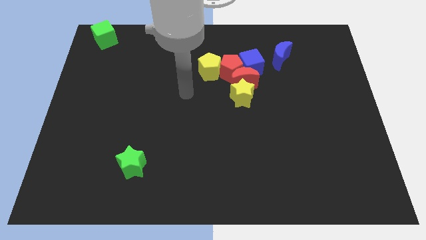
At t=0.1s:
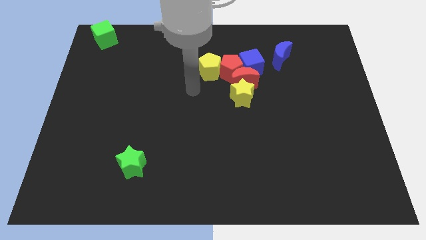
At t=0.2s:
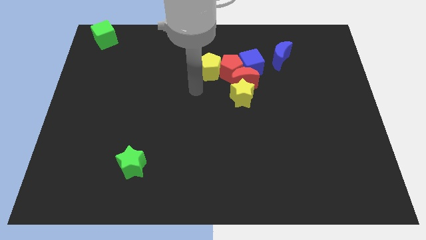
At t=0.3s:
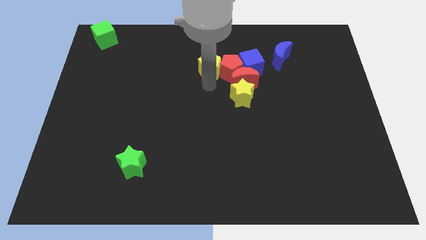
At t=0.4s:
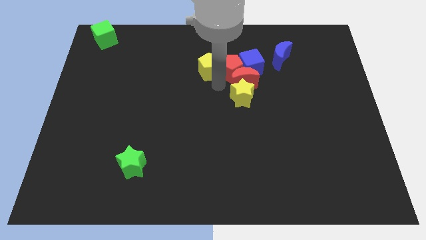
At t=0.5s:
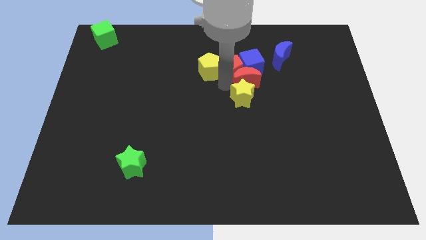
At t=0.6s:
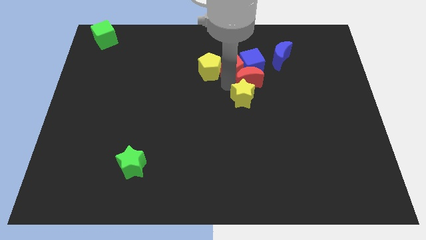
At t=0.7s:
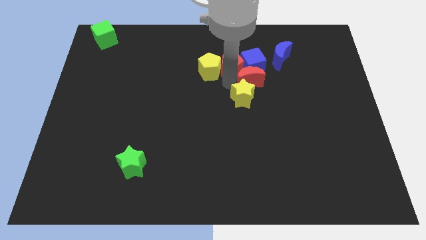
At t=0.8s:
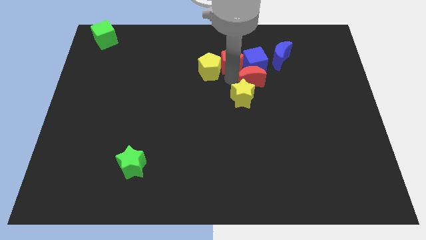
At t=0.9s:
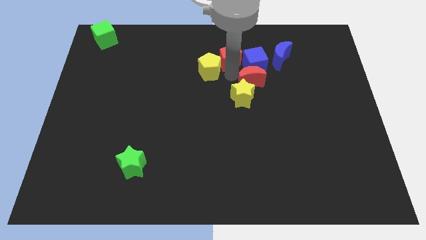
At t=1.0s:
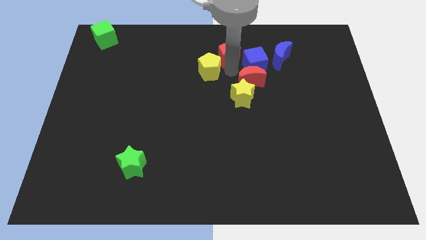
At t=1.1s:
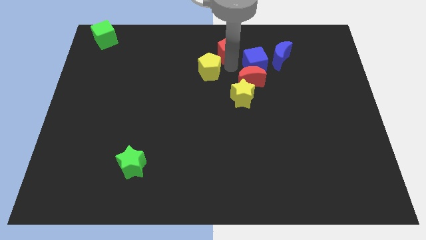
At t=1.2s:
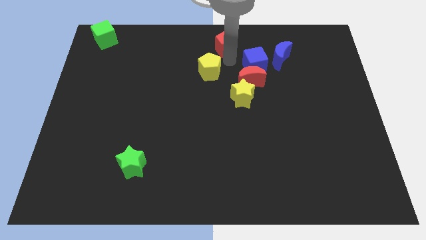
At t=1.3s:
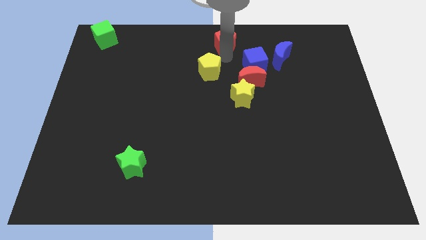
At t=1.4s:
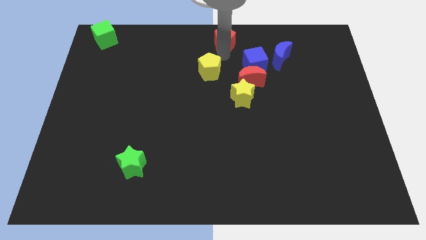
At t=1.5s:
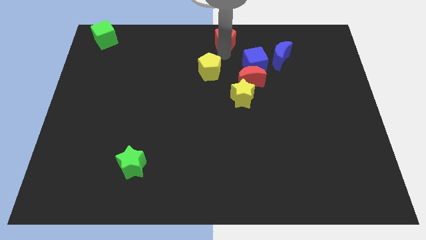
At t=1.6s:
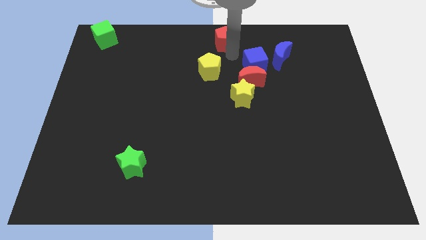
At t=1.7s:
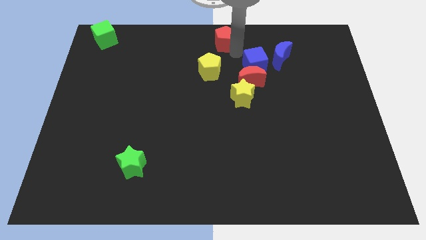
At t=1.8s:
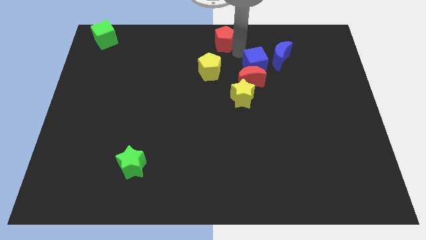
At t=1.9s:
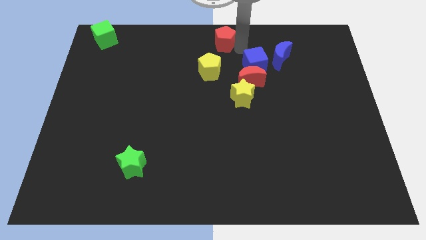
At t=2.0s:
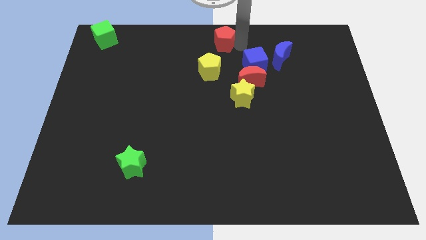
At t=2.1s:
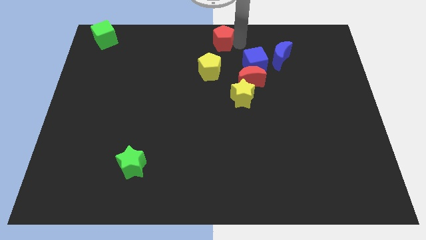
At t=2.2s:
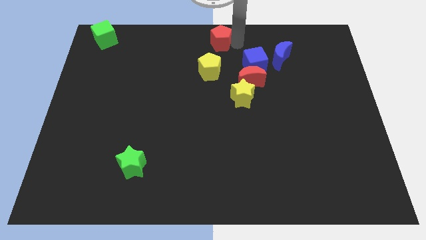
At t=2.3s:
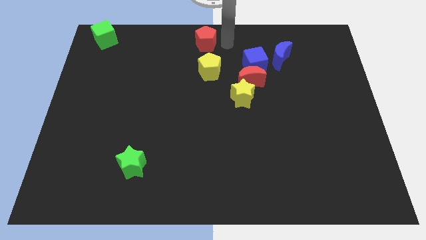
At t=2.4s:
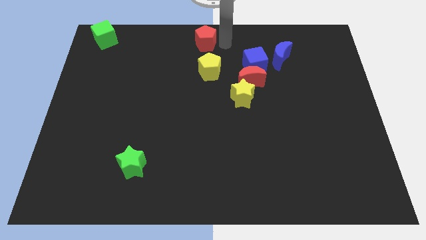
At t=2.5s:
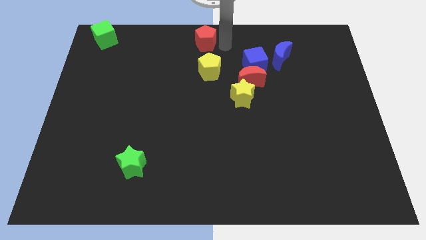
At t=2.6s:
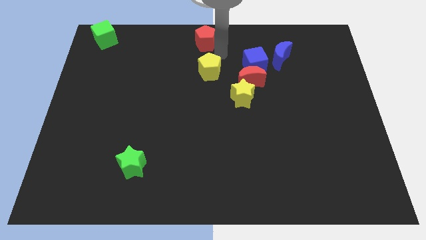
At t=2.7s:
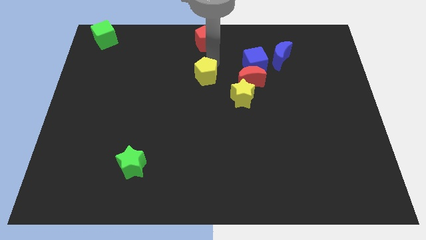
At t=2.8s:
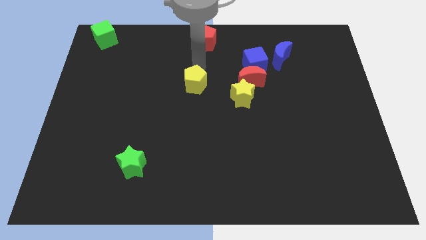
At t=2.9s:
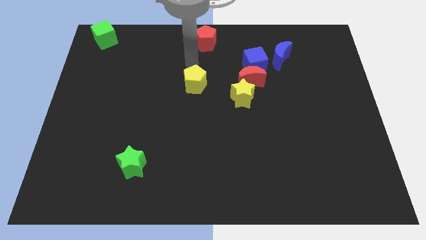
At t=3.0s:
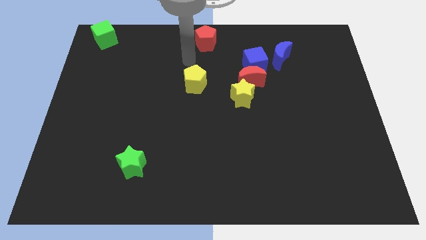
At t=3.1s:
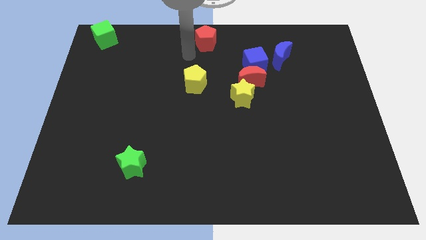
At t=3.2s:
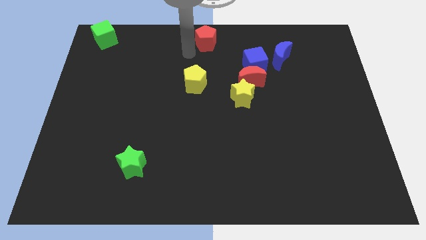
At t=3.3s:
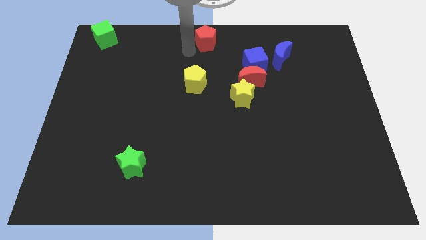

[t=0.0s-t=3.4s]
separate red pentagon and yellow pentagon from each other

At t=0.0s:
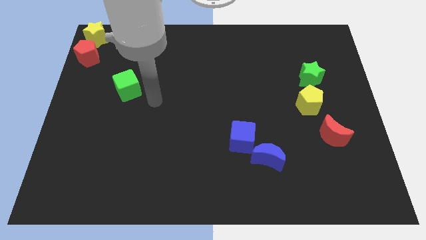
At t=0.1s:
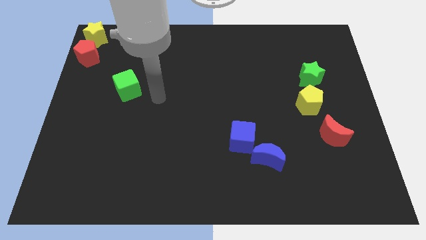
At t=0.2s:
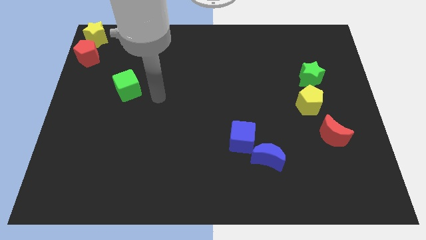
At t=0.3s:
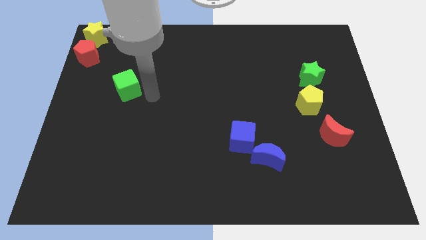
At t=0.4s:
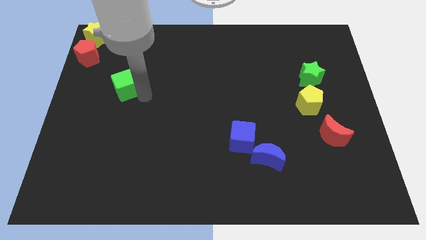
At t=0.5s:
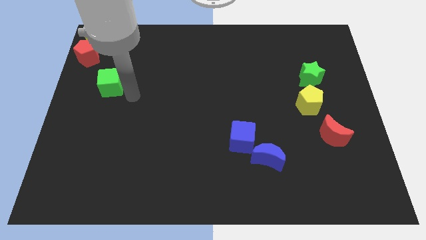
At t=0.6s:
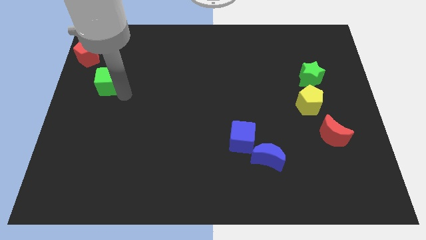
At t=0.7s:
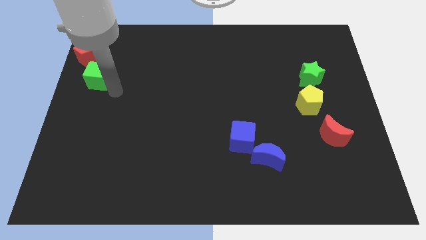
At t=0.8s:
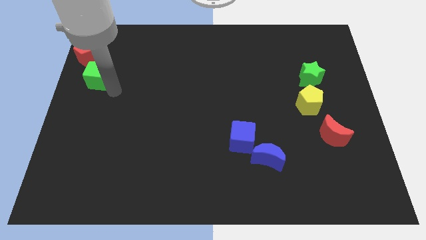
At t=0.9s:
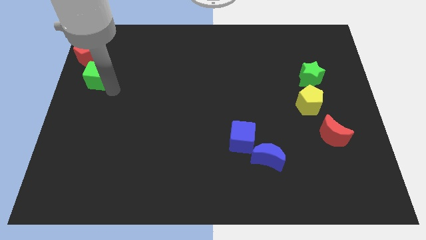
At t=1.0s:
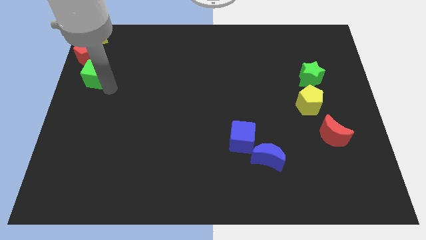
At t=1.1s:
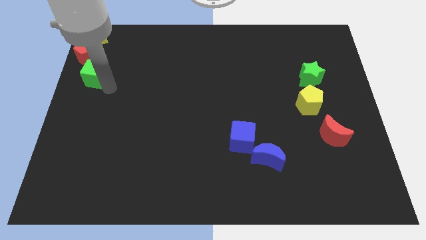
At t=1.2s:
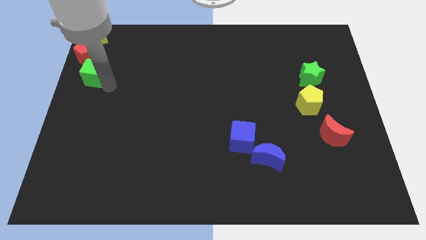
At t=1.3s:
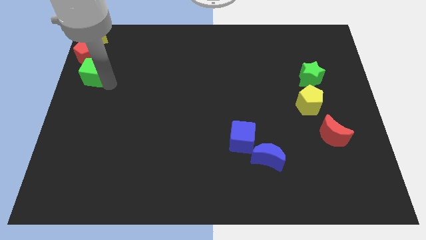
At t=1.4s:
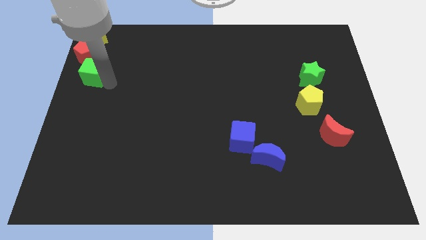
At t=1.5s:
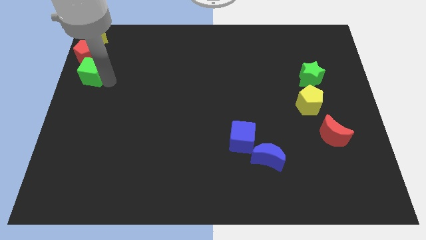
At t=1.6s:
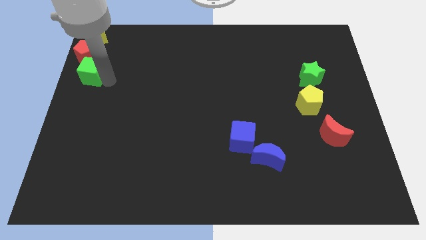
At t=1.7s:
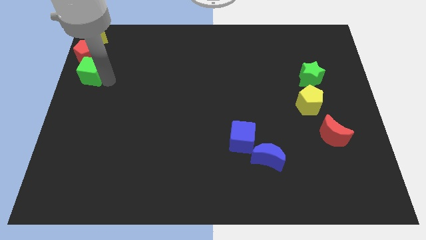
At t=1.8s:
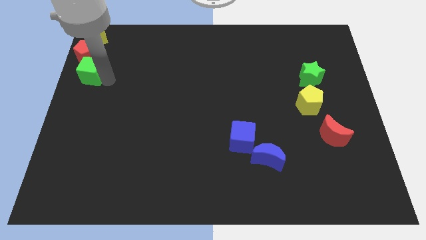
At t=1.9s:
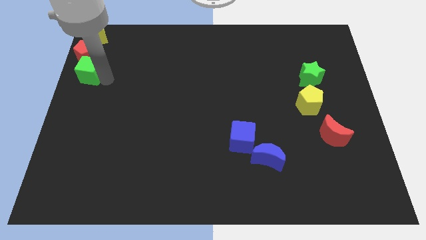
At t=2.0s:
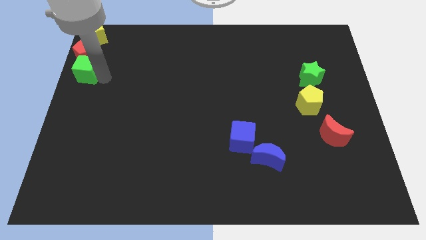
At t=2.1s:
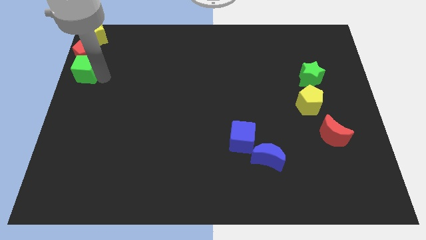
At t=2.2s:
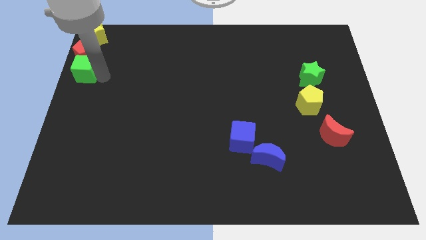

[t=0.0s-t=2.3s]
move the green cube to the bottom right of the red pentagon

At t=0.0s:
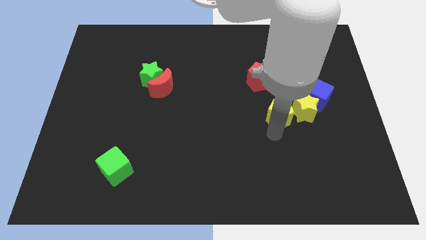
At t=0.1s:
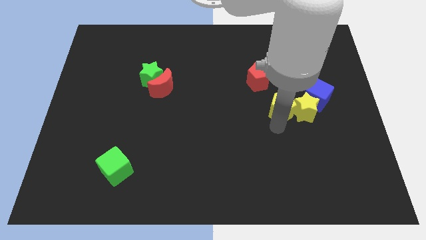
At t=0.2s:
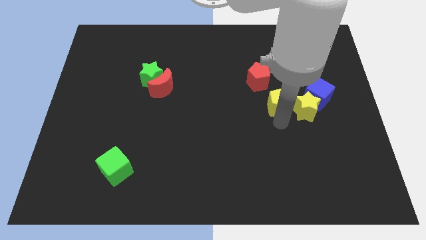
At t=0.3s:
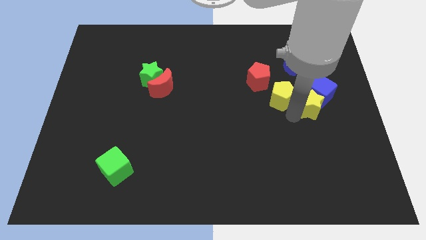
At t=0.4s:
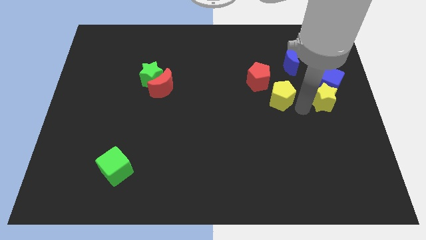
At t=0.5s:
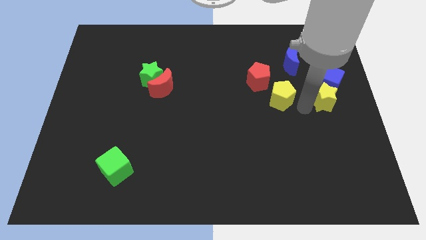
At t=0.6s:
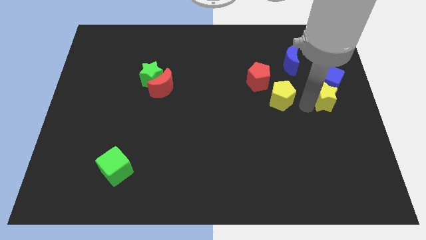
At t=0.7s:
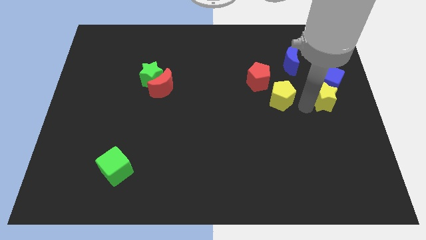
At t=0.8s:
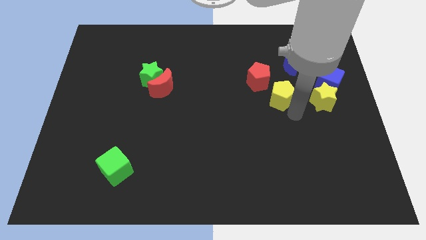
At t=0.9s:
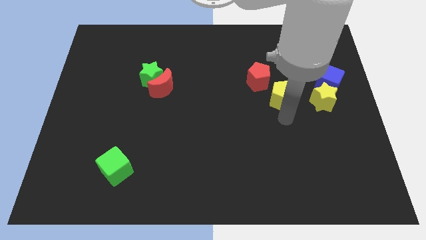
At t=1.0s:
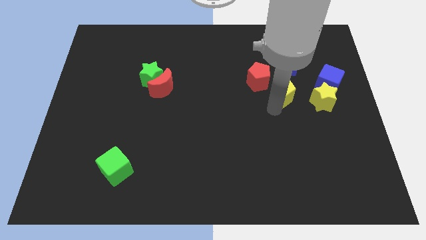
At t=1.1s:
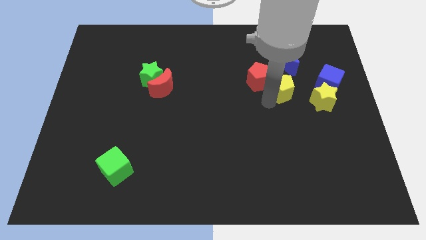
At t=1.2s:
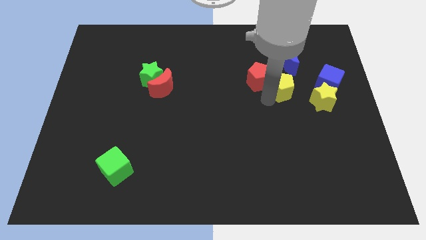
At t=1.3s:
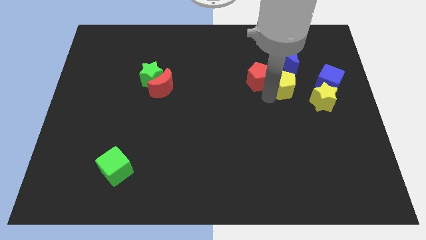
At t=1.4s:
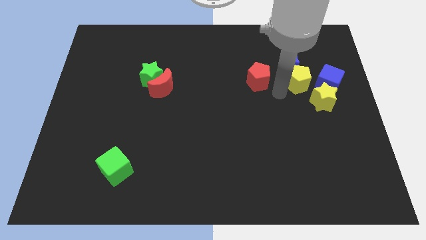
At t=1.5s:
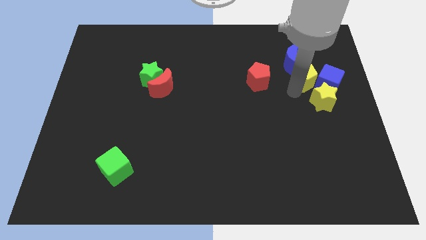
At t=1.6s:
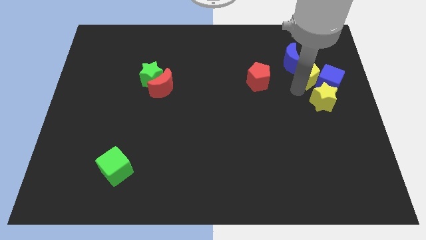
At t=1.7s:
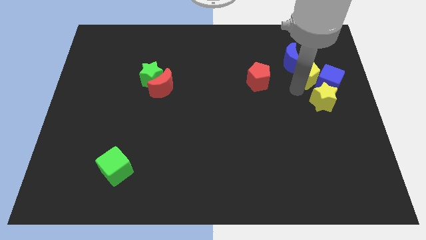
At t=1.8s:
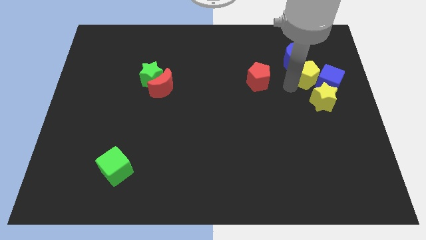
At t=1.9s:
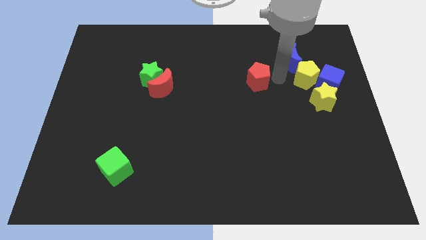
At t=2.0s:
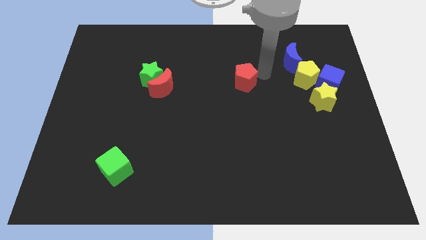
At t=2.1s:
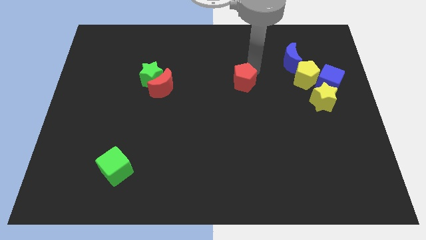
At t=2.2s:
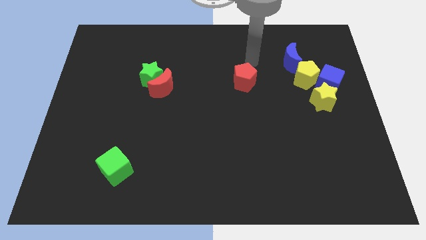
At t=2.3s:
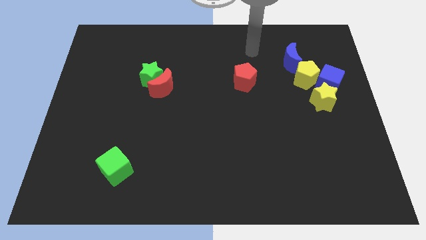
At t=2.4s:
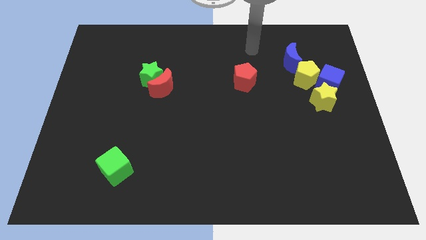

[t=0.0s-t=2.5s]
push the yellow pentagon into the blue cube and blue crescent

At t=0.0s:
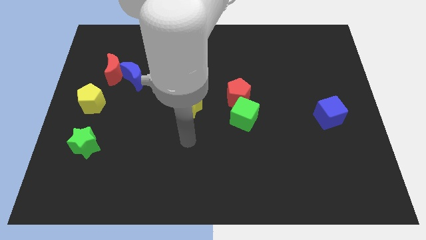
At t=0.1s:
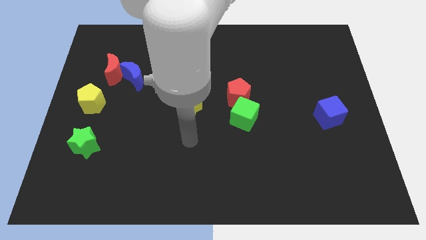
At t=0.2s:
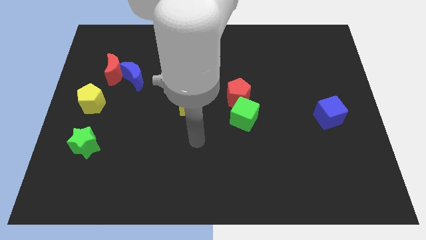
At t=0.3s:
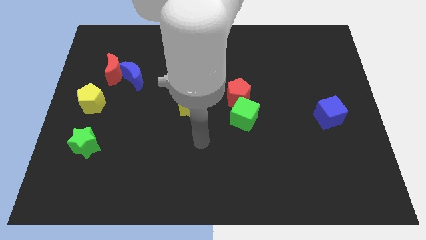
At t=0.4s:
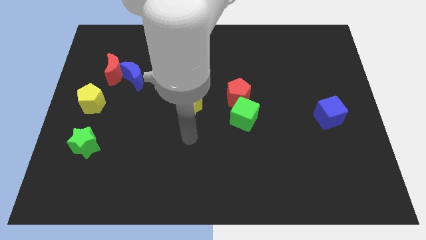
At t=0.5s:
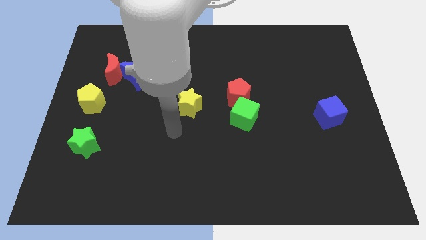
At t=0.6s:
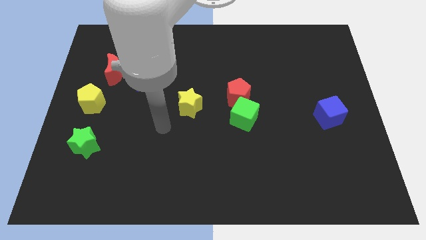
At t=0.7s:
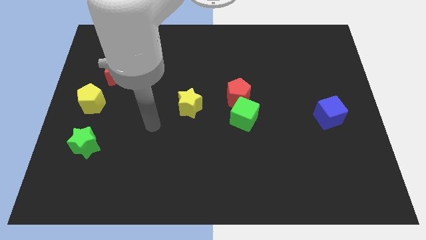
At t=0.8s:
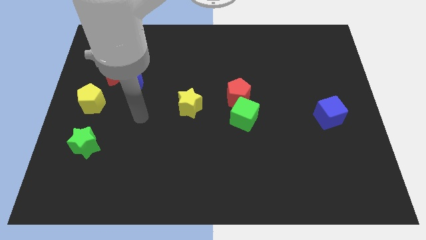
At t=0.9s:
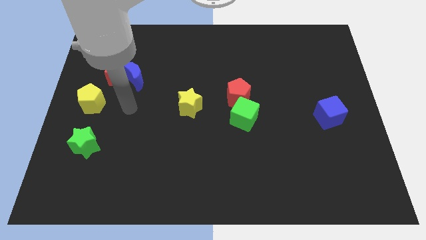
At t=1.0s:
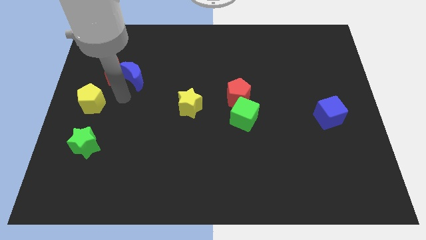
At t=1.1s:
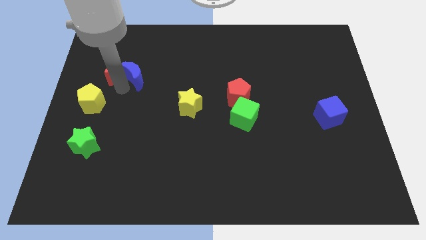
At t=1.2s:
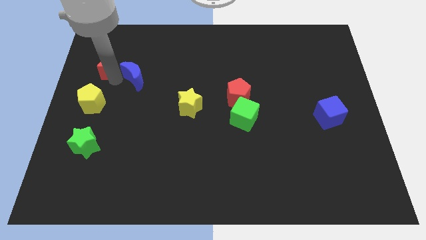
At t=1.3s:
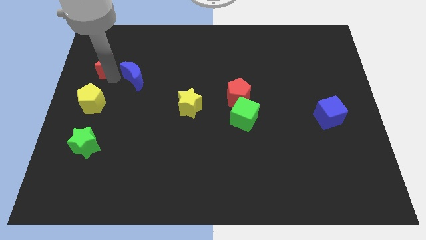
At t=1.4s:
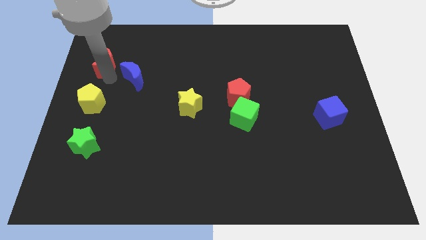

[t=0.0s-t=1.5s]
push the red crescent towards the top left corner of the board
